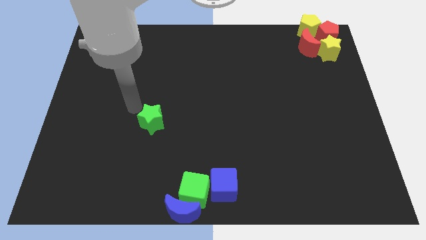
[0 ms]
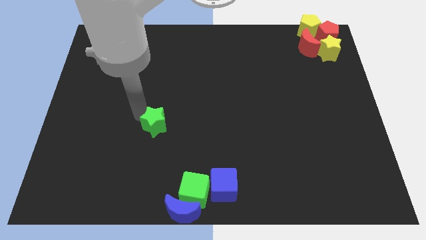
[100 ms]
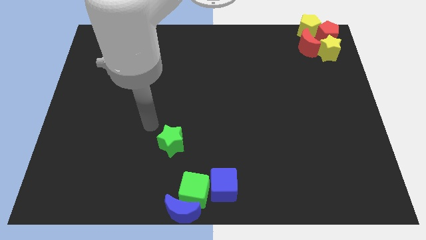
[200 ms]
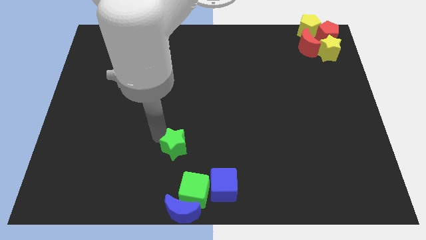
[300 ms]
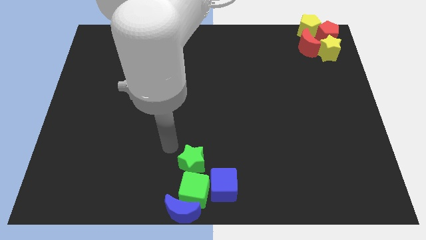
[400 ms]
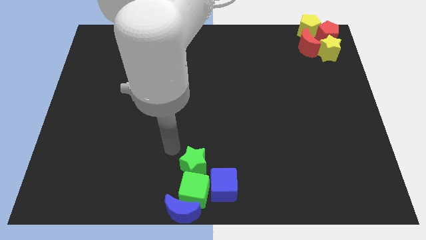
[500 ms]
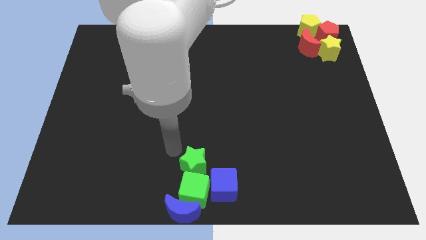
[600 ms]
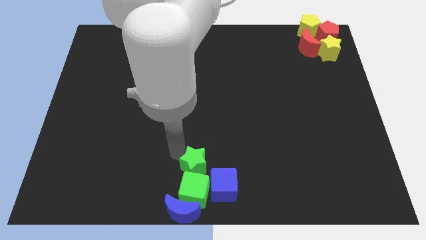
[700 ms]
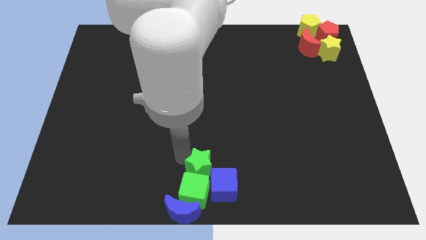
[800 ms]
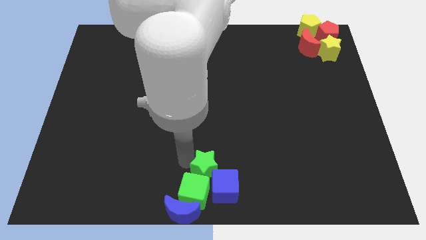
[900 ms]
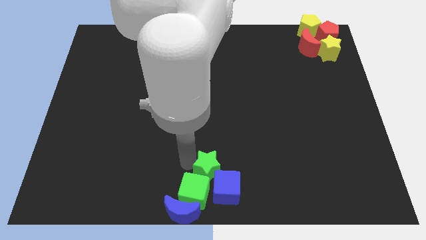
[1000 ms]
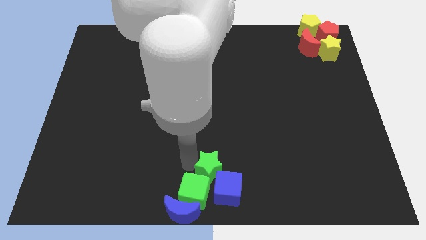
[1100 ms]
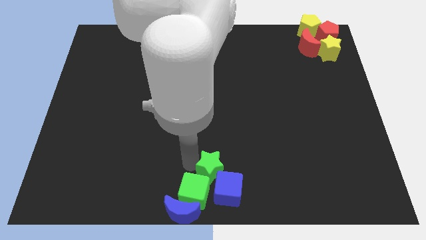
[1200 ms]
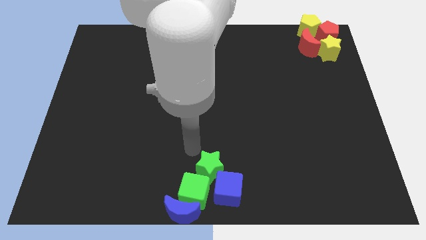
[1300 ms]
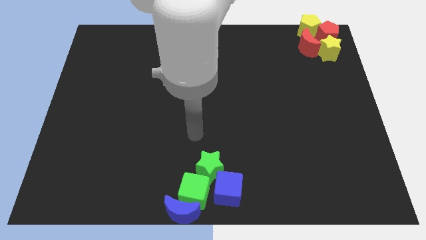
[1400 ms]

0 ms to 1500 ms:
push the green star towards blue cube

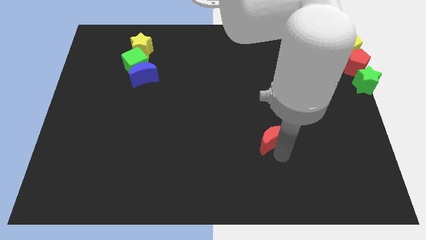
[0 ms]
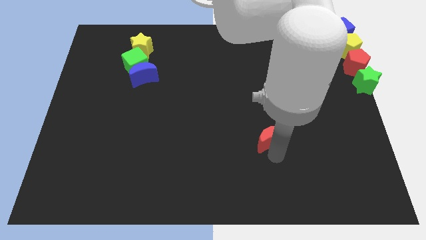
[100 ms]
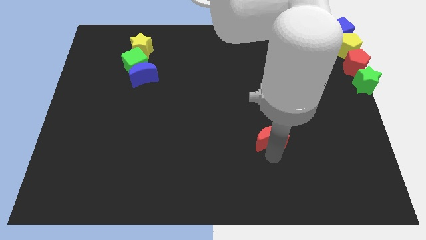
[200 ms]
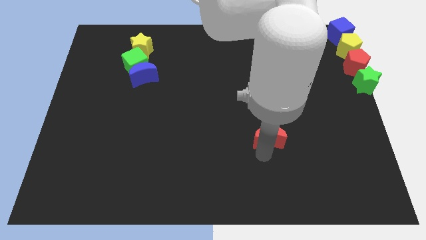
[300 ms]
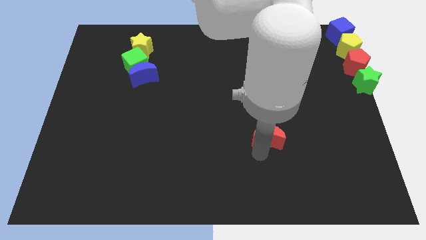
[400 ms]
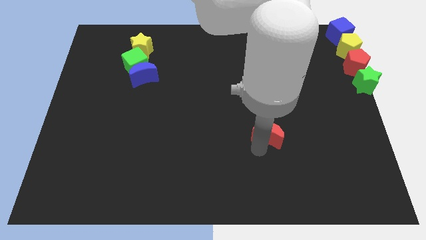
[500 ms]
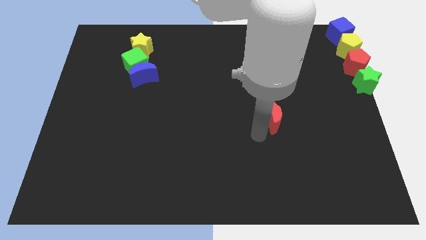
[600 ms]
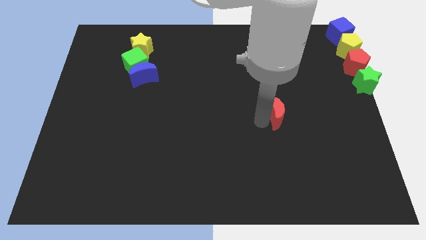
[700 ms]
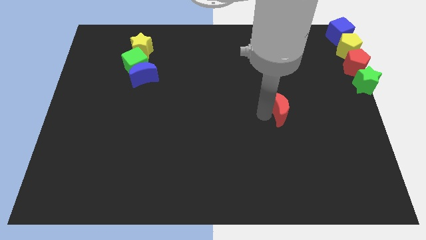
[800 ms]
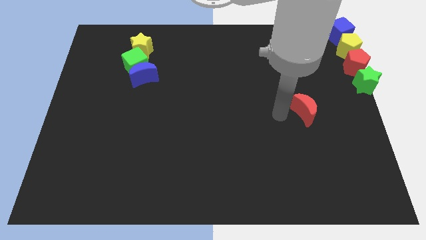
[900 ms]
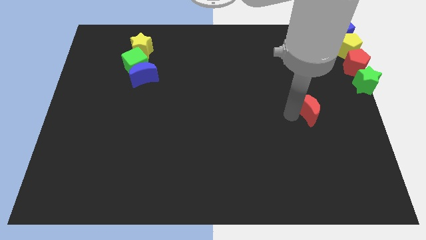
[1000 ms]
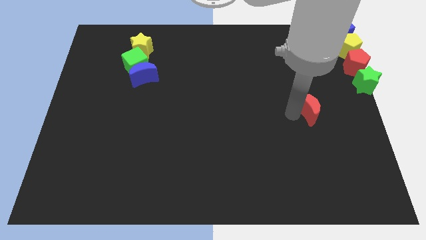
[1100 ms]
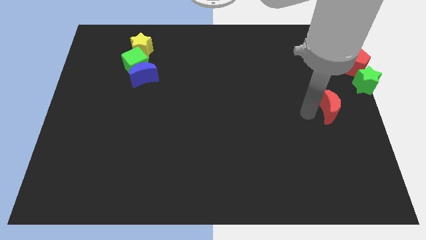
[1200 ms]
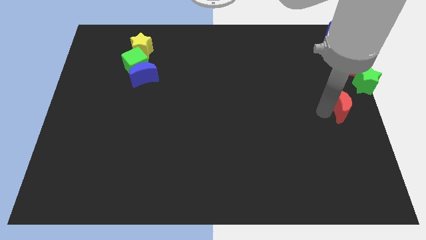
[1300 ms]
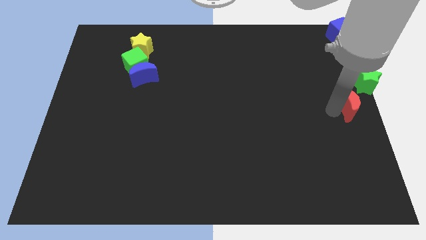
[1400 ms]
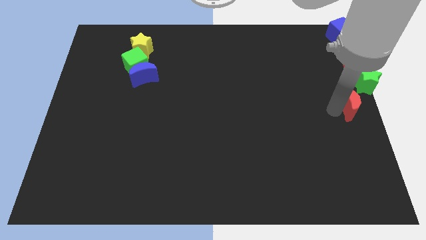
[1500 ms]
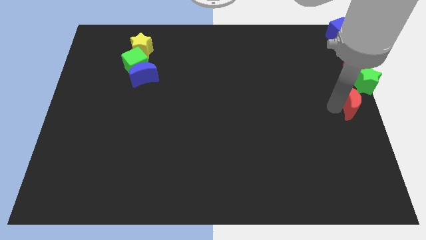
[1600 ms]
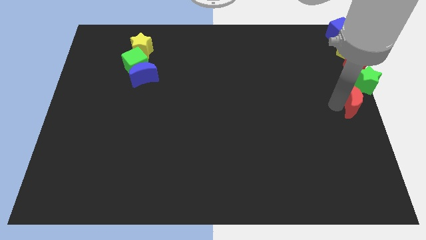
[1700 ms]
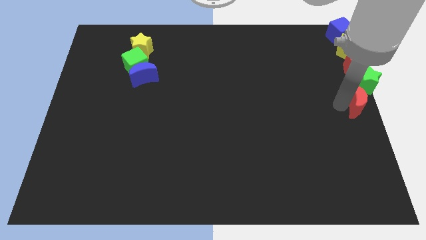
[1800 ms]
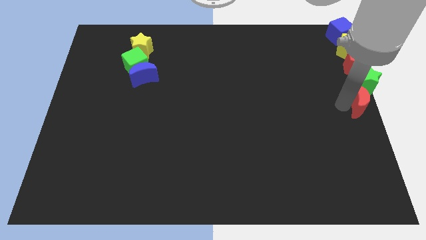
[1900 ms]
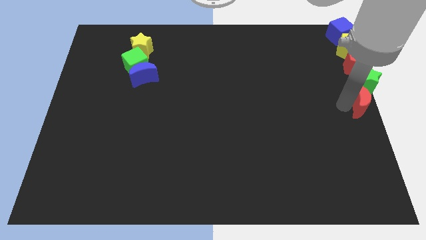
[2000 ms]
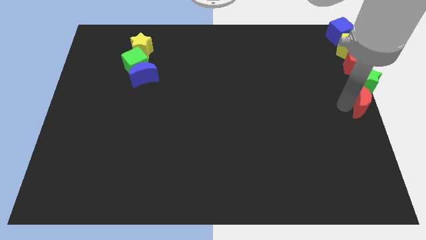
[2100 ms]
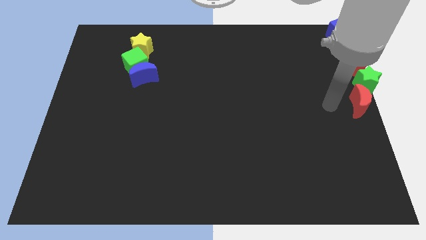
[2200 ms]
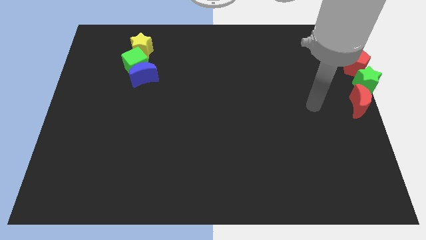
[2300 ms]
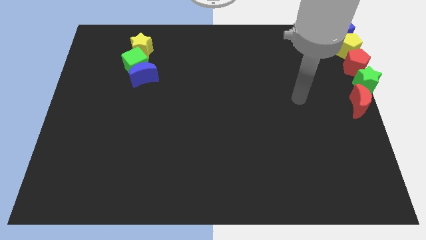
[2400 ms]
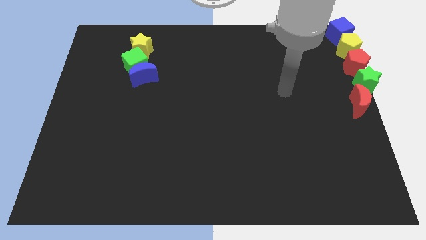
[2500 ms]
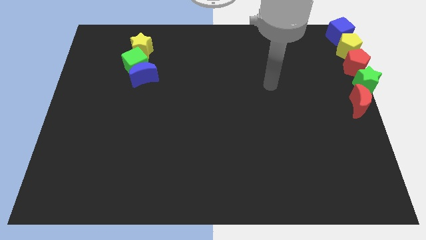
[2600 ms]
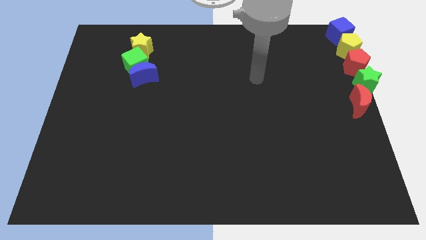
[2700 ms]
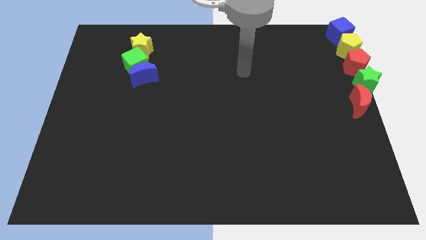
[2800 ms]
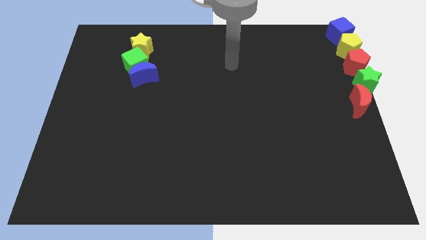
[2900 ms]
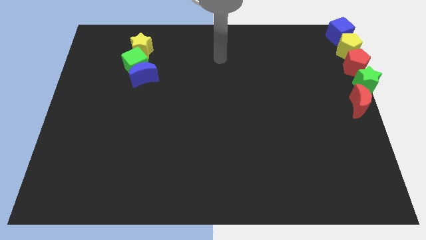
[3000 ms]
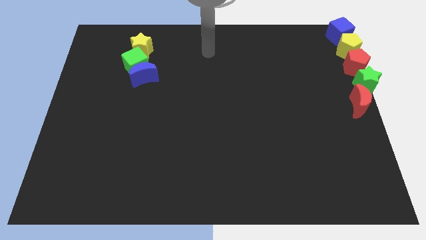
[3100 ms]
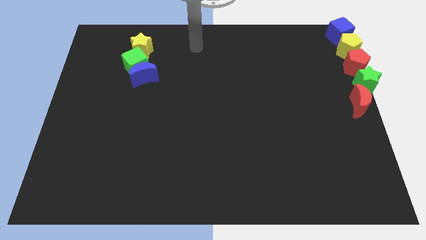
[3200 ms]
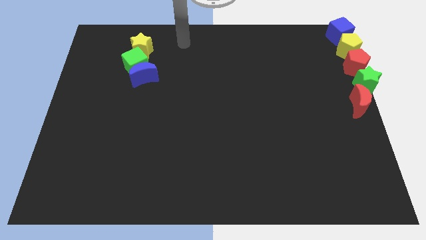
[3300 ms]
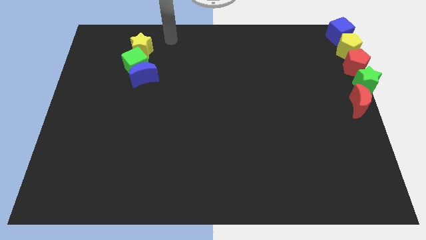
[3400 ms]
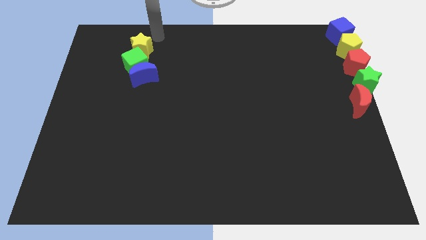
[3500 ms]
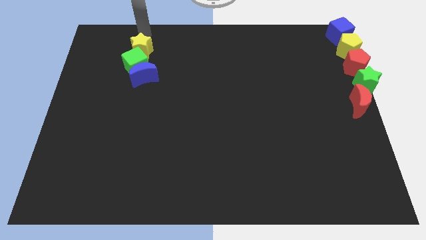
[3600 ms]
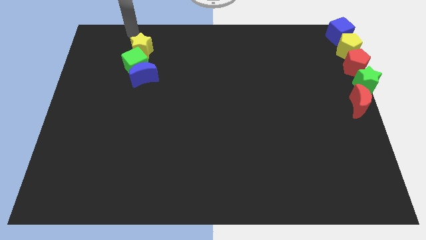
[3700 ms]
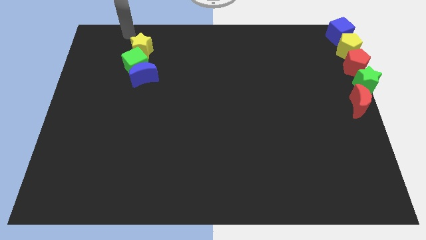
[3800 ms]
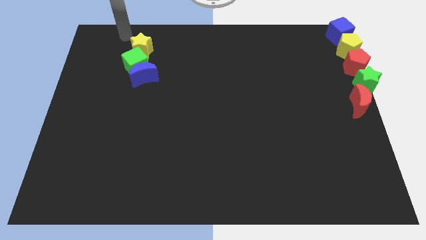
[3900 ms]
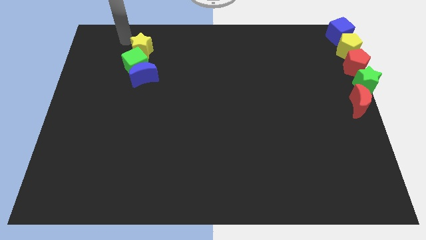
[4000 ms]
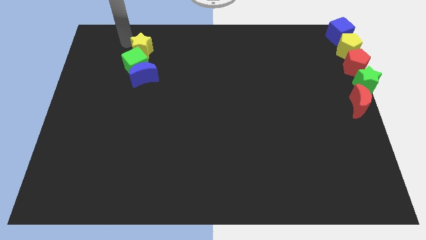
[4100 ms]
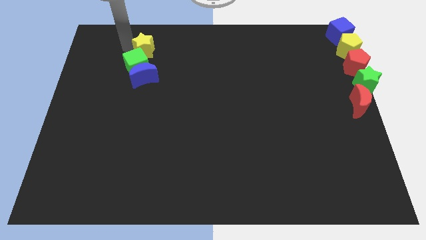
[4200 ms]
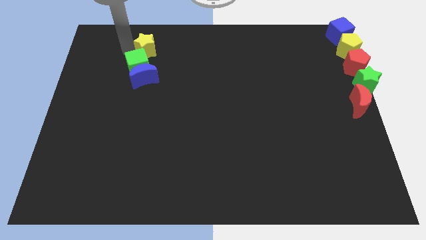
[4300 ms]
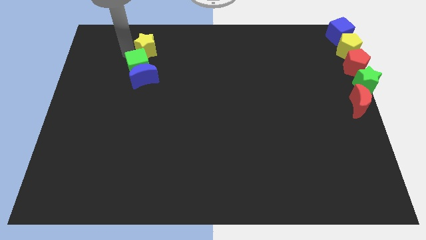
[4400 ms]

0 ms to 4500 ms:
place the red crescent at the right center

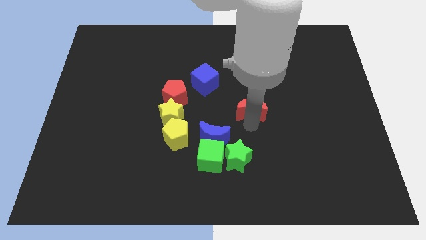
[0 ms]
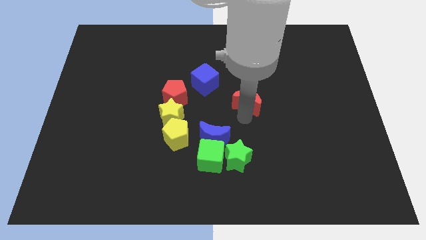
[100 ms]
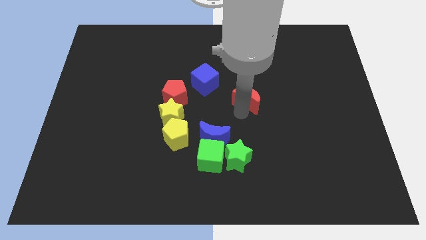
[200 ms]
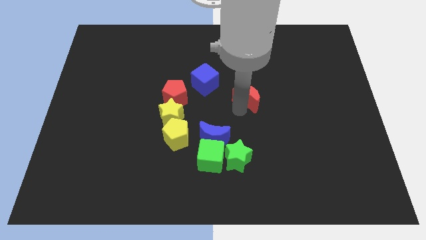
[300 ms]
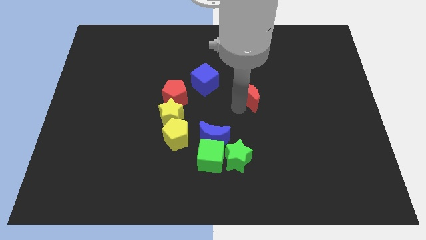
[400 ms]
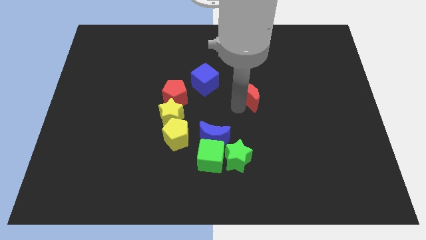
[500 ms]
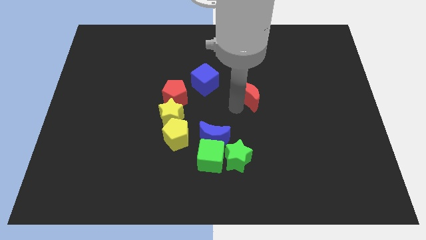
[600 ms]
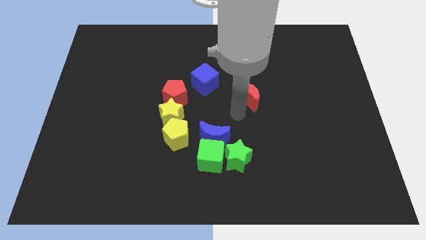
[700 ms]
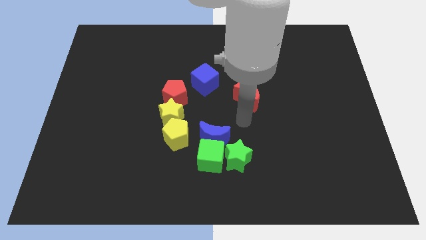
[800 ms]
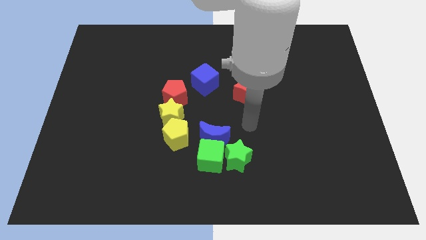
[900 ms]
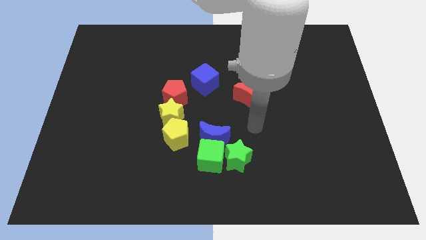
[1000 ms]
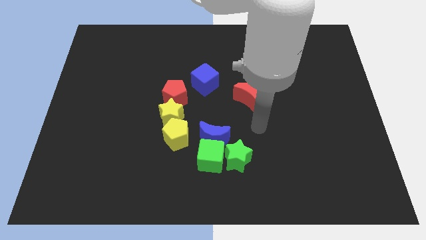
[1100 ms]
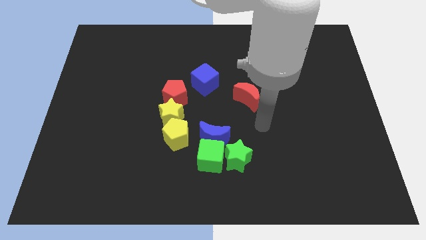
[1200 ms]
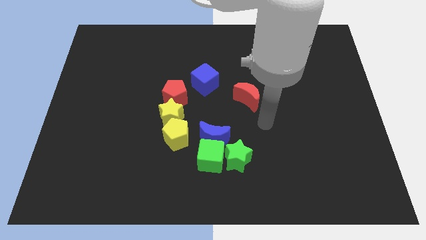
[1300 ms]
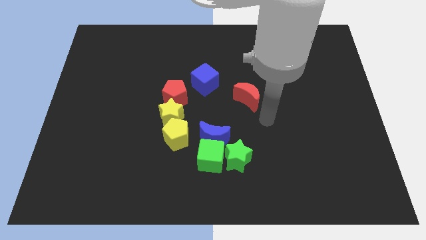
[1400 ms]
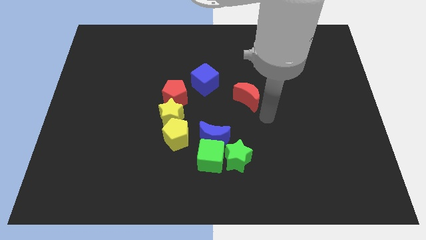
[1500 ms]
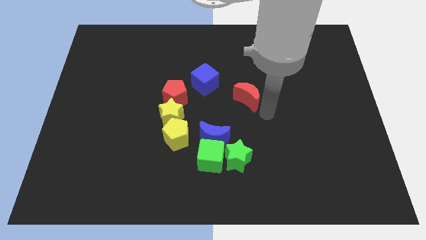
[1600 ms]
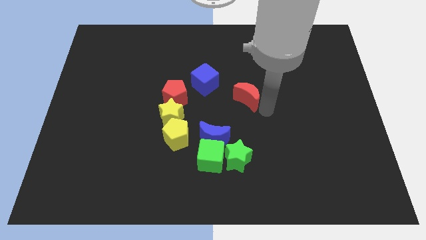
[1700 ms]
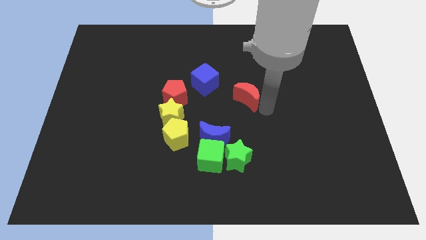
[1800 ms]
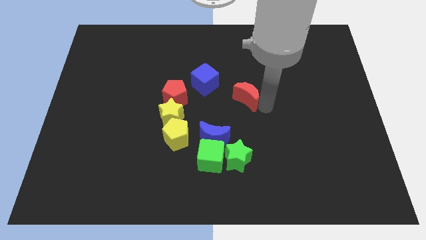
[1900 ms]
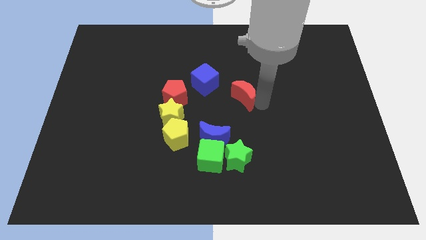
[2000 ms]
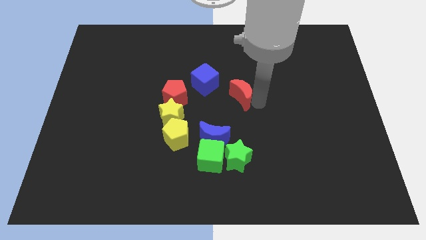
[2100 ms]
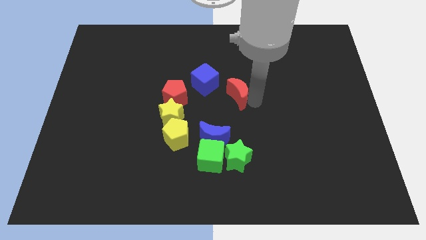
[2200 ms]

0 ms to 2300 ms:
move red moon close to blue cube

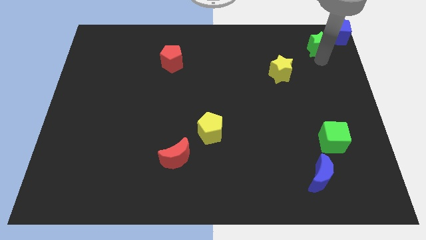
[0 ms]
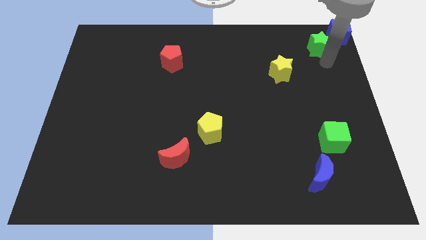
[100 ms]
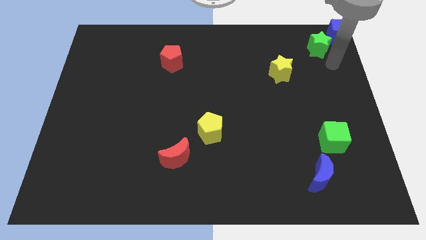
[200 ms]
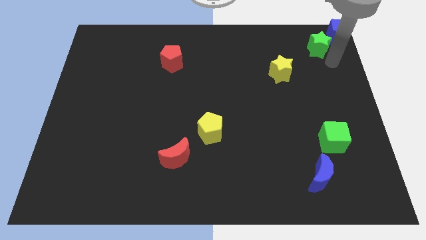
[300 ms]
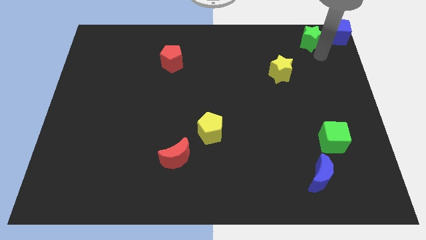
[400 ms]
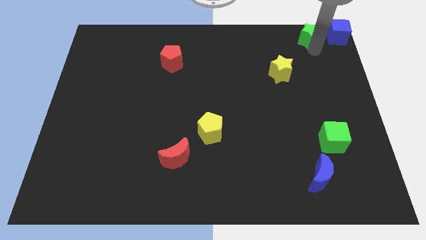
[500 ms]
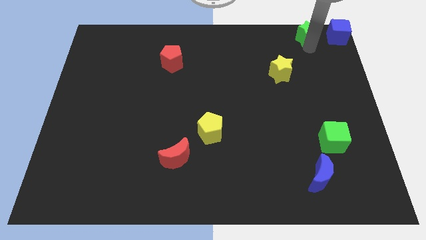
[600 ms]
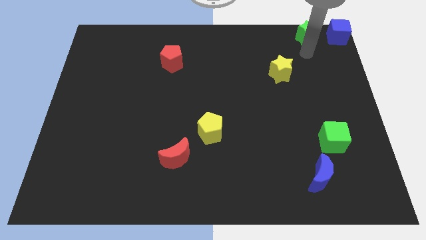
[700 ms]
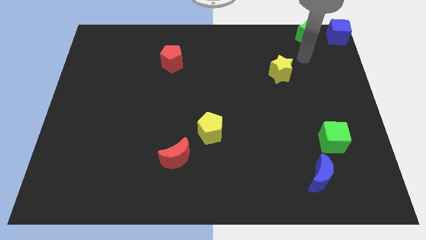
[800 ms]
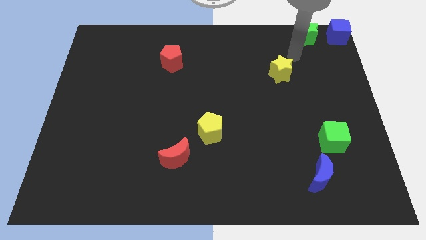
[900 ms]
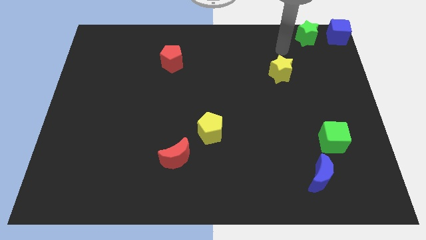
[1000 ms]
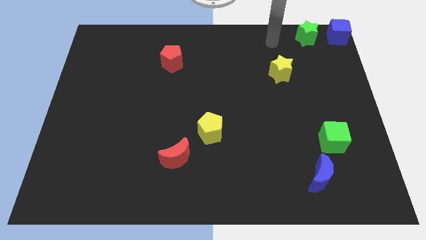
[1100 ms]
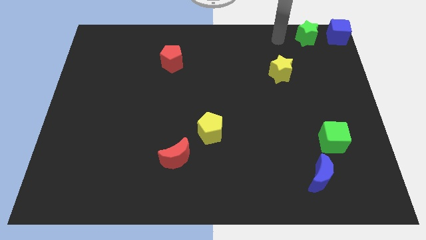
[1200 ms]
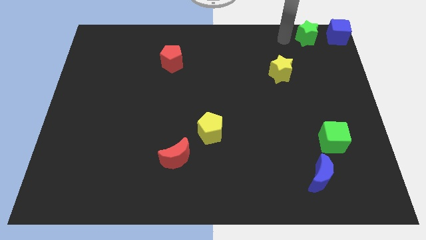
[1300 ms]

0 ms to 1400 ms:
place the green star to the left side of the blue cube
